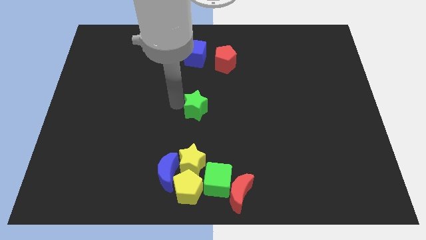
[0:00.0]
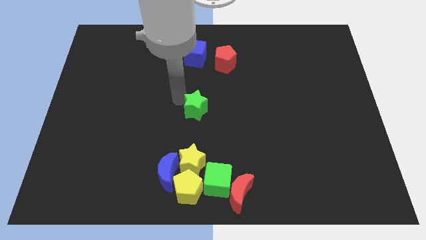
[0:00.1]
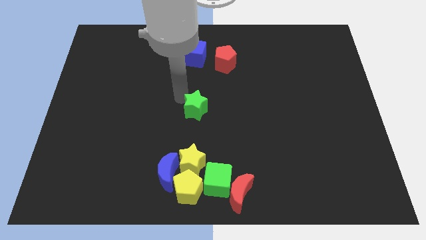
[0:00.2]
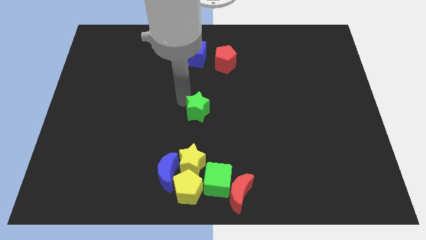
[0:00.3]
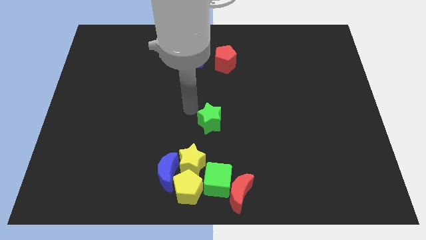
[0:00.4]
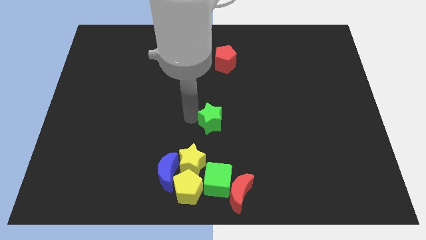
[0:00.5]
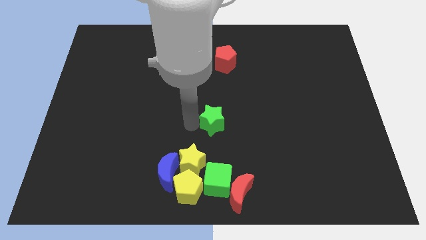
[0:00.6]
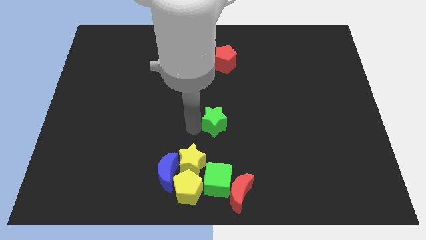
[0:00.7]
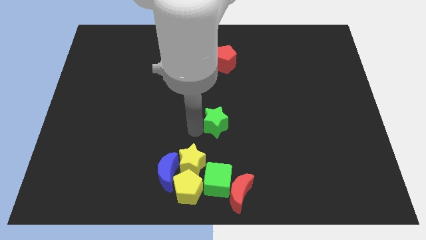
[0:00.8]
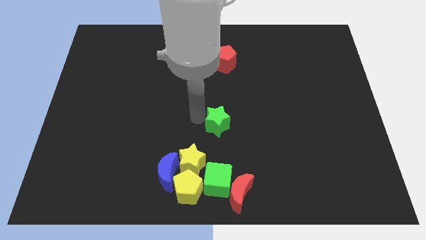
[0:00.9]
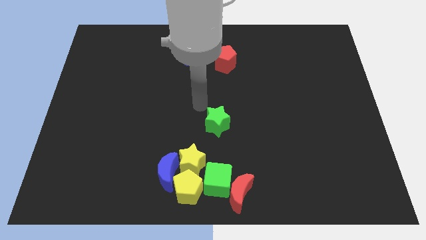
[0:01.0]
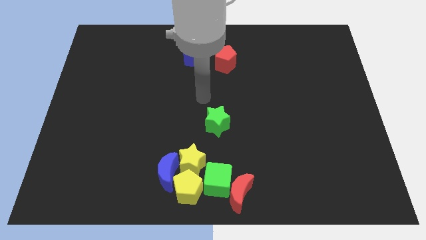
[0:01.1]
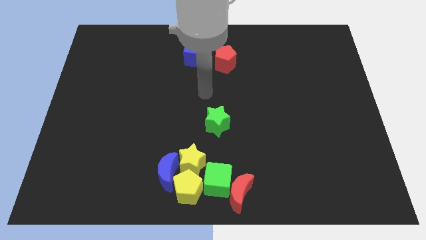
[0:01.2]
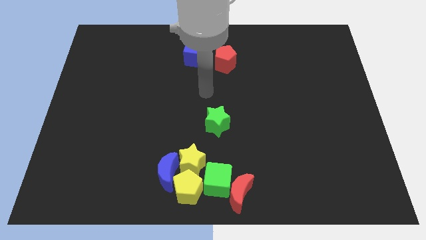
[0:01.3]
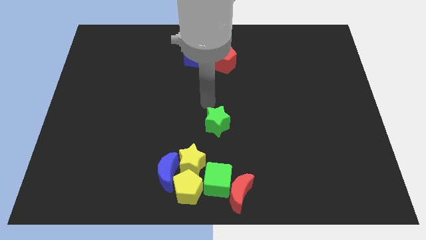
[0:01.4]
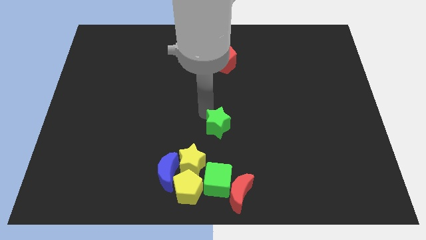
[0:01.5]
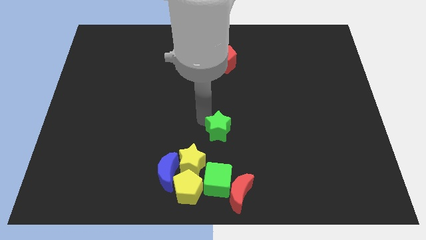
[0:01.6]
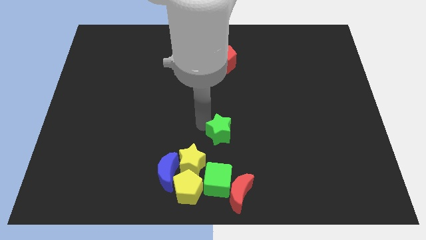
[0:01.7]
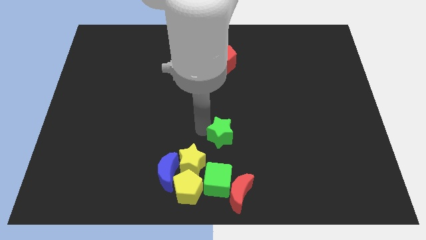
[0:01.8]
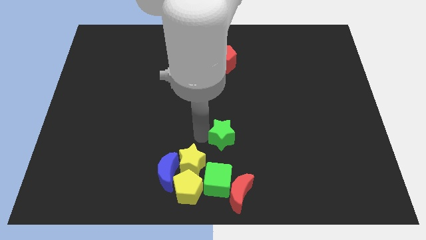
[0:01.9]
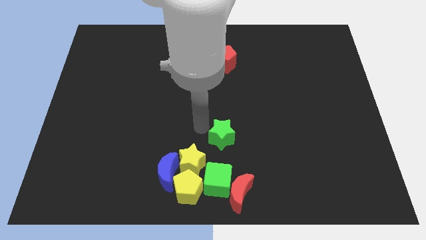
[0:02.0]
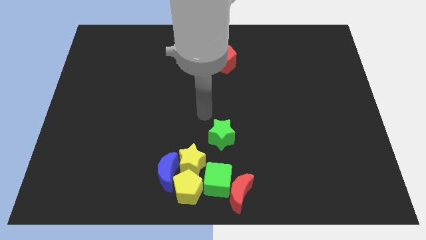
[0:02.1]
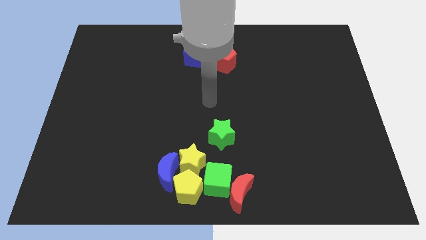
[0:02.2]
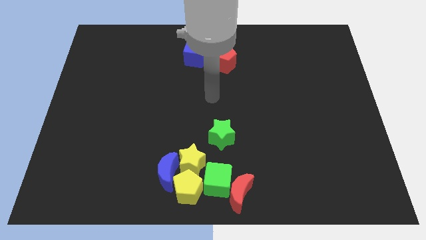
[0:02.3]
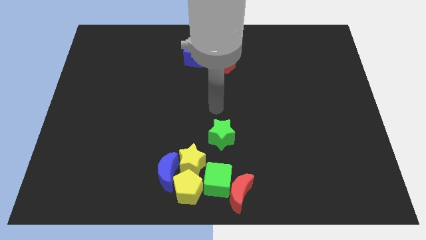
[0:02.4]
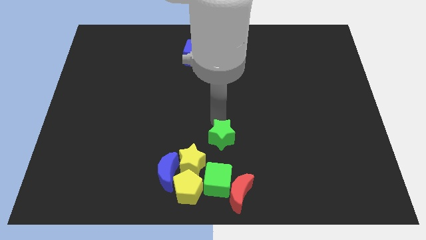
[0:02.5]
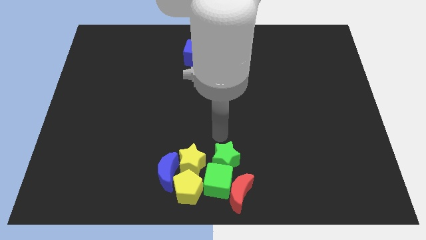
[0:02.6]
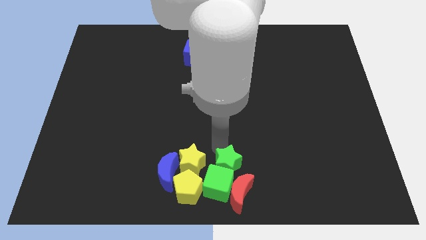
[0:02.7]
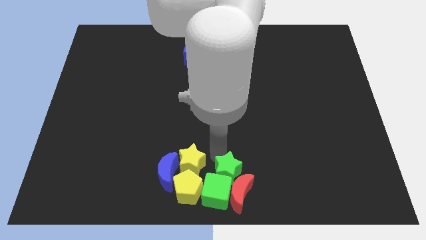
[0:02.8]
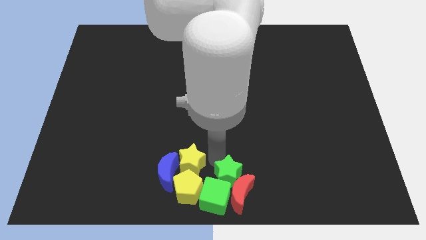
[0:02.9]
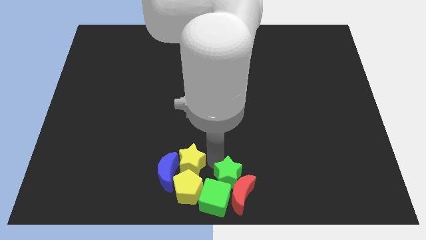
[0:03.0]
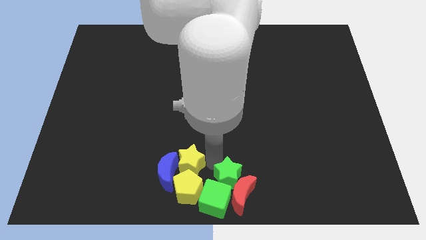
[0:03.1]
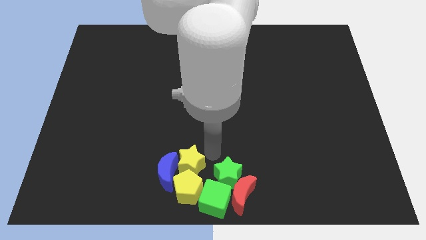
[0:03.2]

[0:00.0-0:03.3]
place green star to bottom center of the board

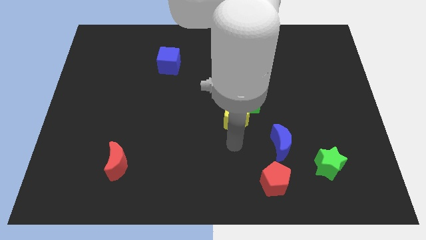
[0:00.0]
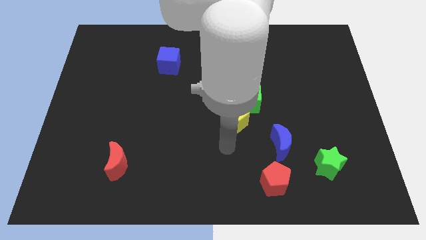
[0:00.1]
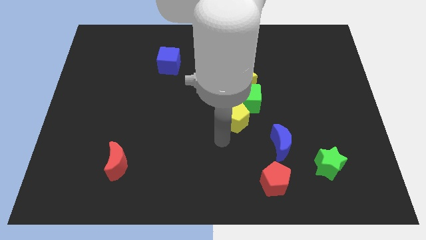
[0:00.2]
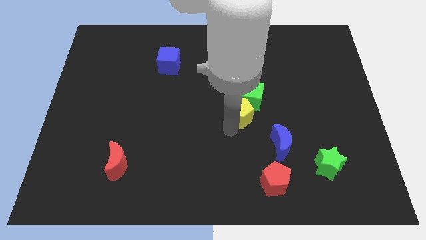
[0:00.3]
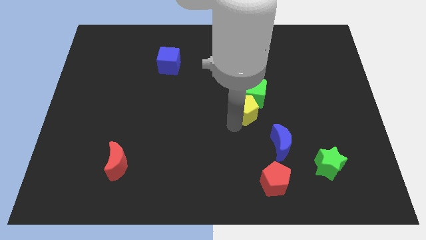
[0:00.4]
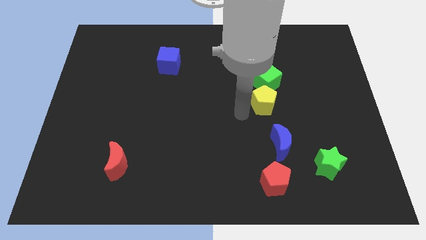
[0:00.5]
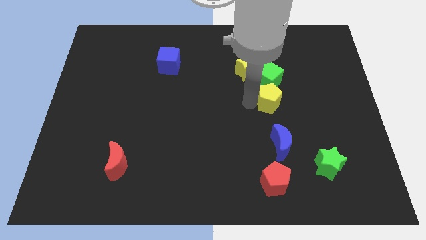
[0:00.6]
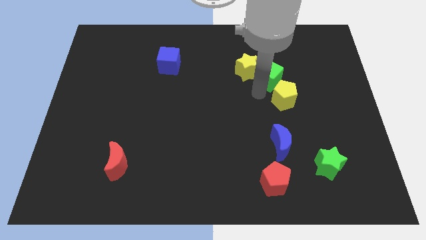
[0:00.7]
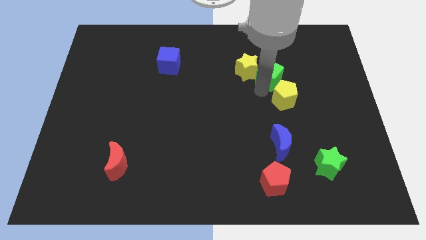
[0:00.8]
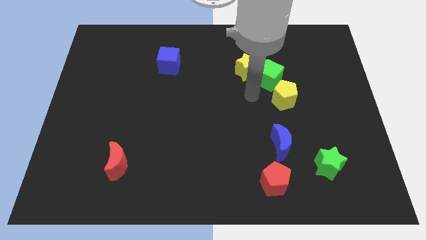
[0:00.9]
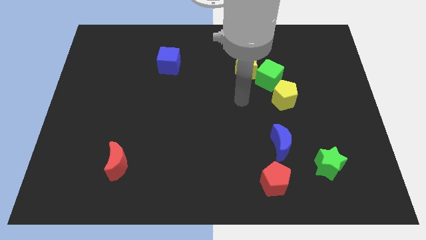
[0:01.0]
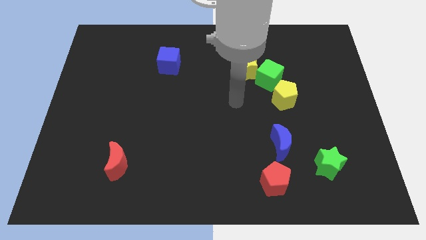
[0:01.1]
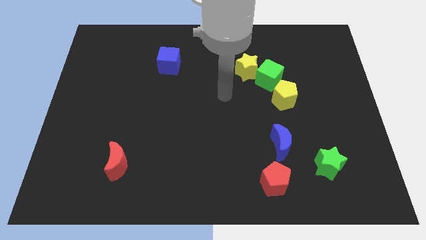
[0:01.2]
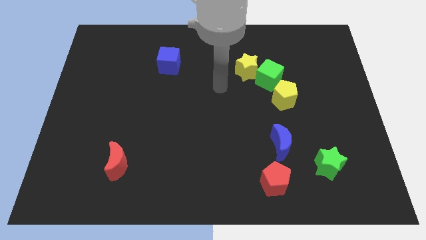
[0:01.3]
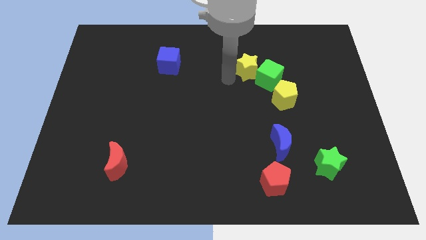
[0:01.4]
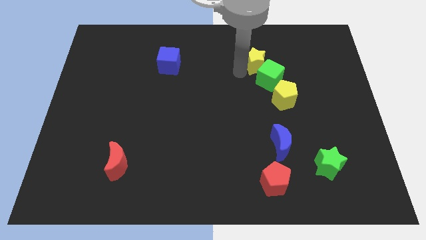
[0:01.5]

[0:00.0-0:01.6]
push green cube with the yellow pentagon

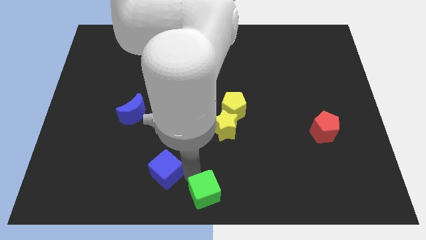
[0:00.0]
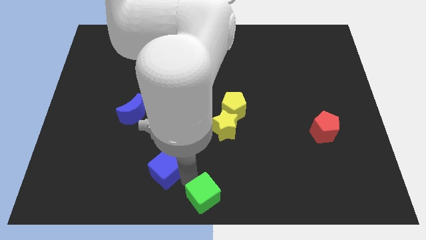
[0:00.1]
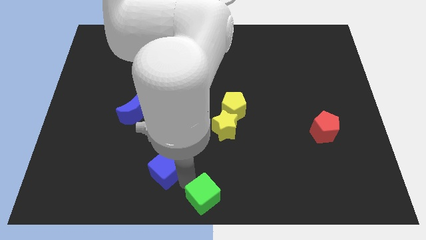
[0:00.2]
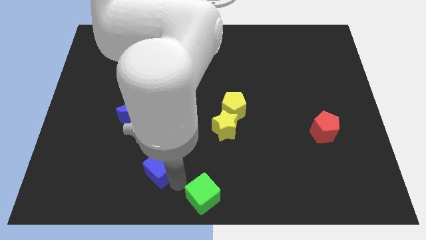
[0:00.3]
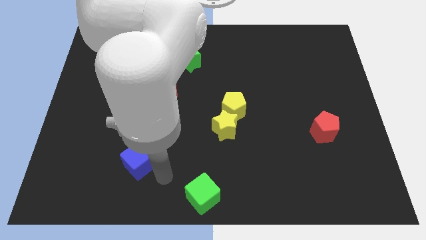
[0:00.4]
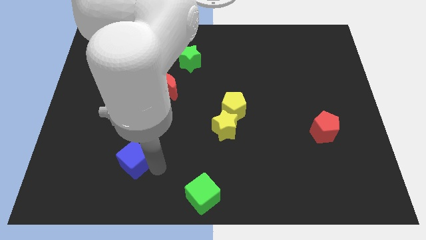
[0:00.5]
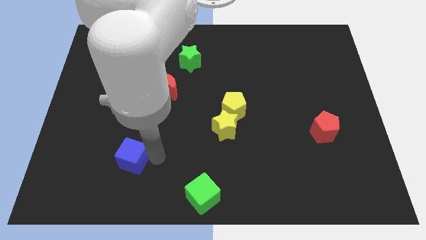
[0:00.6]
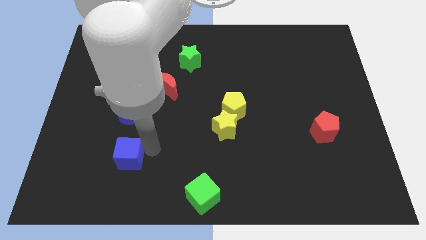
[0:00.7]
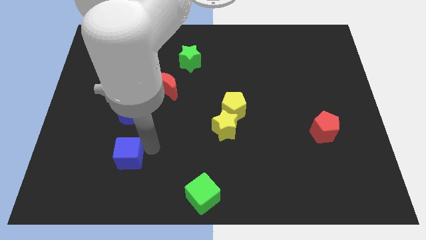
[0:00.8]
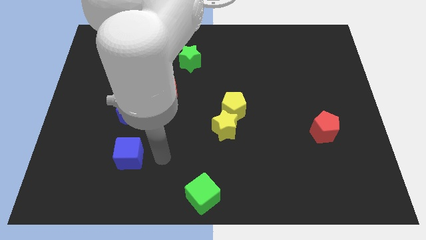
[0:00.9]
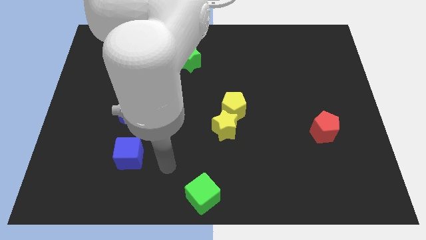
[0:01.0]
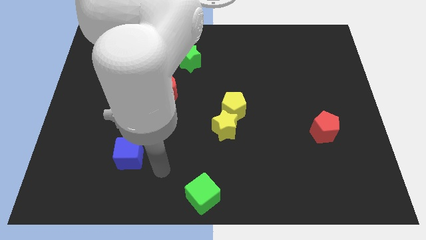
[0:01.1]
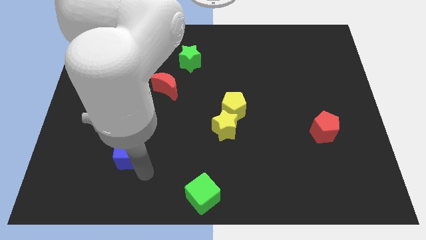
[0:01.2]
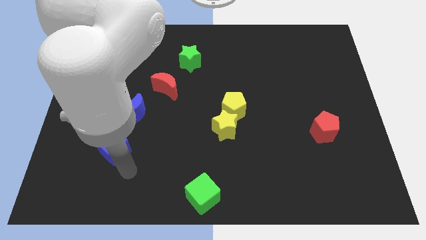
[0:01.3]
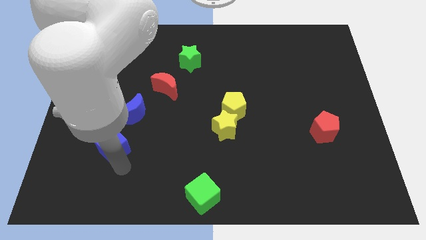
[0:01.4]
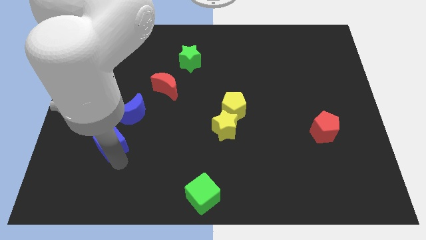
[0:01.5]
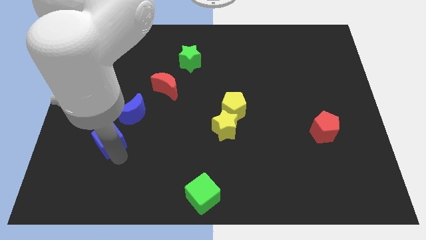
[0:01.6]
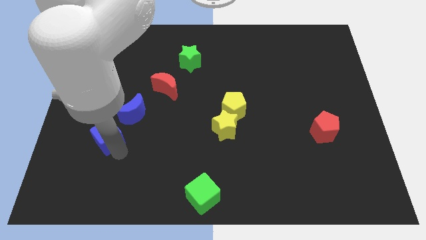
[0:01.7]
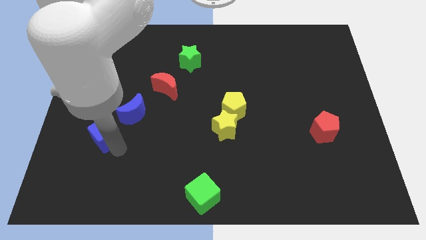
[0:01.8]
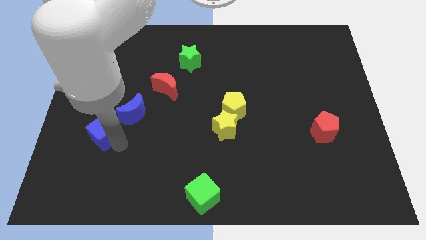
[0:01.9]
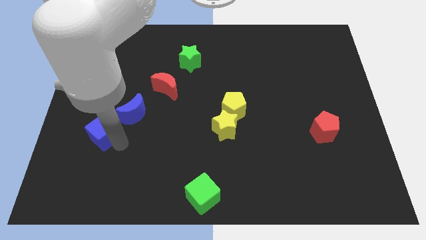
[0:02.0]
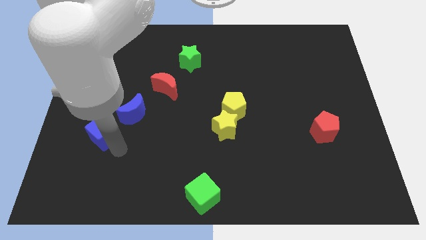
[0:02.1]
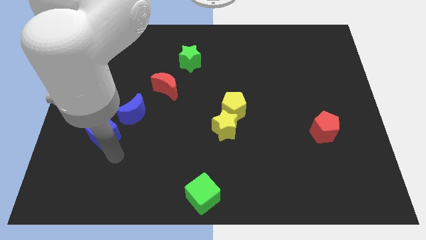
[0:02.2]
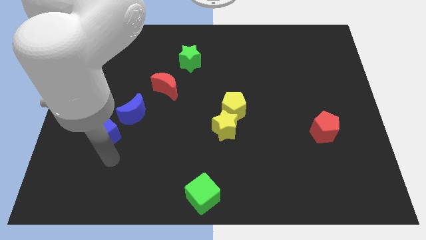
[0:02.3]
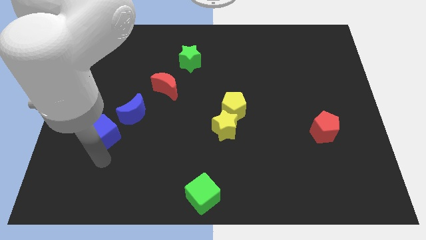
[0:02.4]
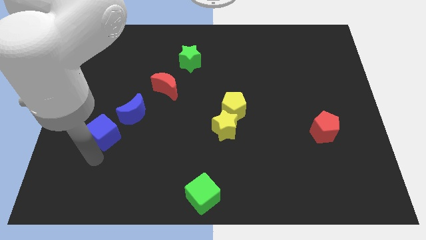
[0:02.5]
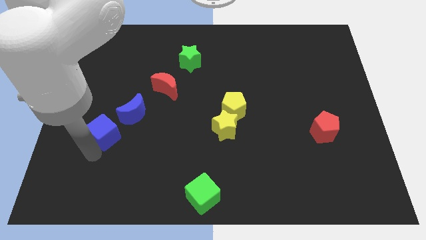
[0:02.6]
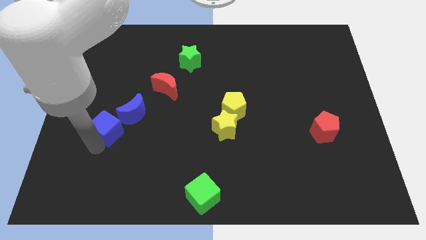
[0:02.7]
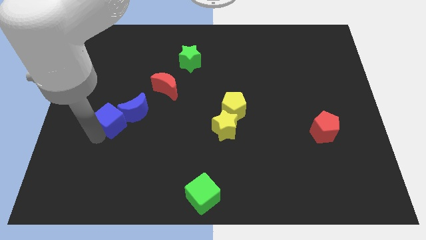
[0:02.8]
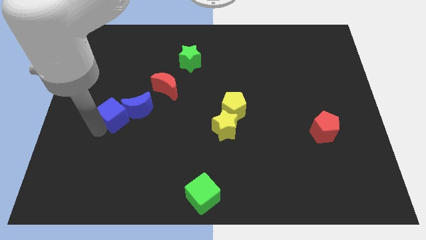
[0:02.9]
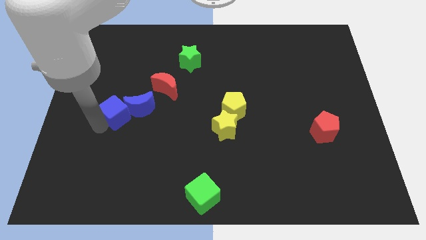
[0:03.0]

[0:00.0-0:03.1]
push the blue cube to the left side of the blue moon

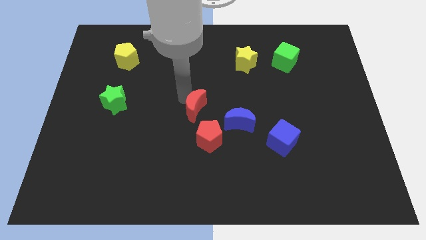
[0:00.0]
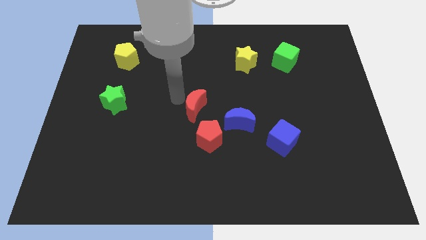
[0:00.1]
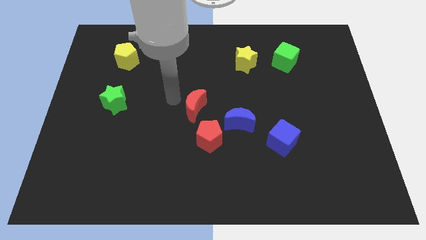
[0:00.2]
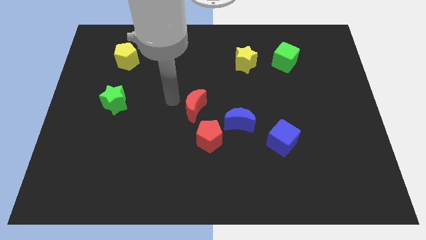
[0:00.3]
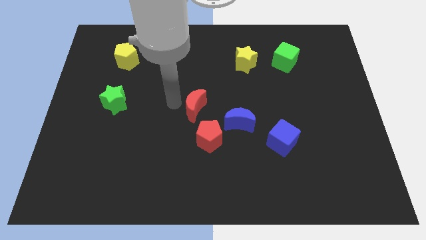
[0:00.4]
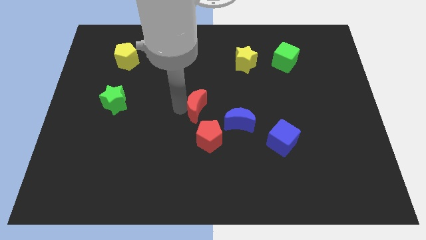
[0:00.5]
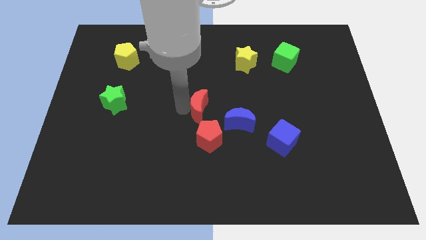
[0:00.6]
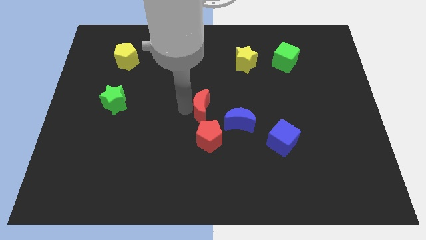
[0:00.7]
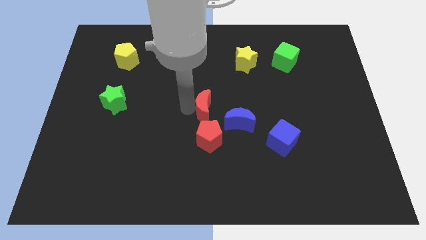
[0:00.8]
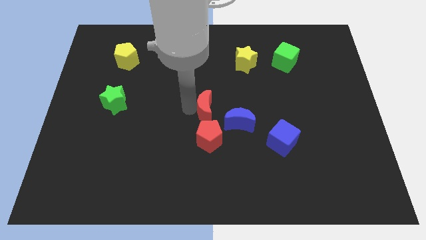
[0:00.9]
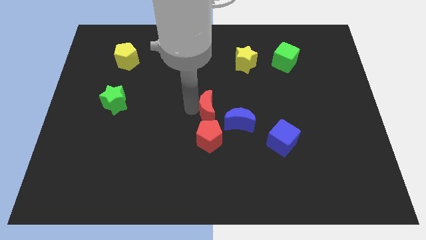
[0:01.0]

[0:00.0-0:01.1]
place the red moon to the top of red pentagon
